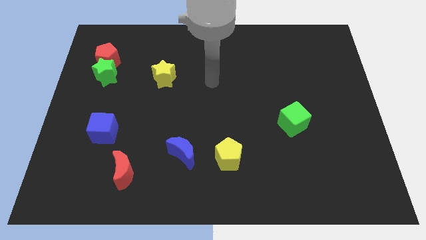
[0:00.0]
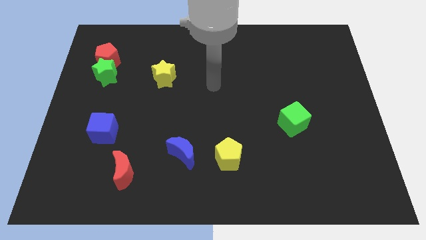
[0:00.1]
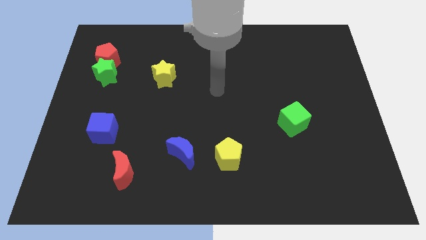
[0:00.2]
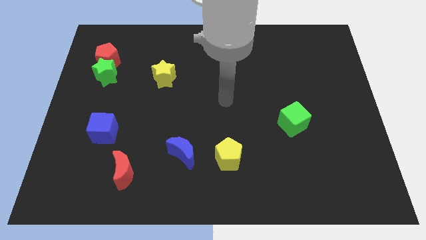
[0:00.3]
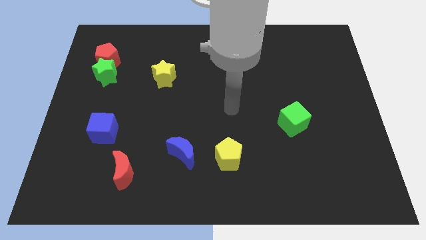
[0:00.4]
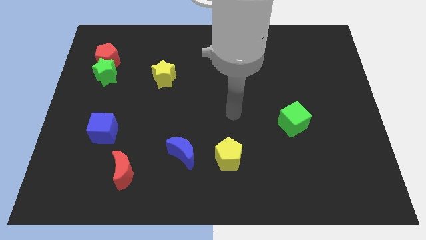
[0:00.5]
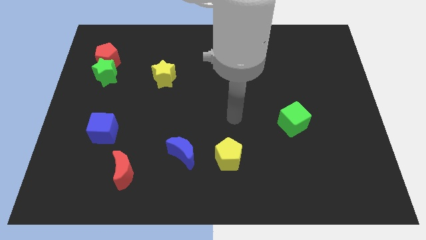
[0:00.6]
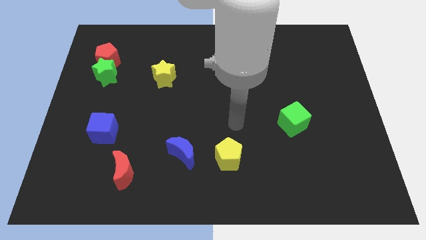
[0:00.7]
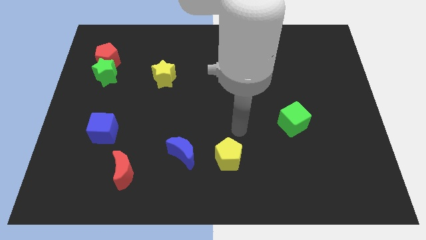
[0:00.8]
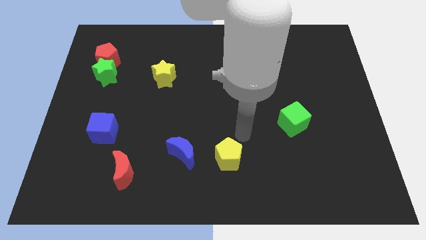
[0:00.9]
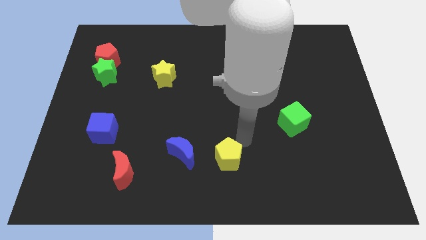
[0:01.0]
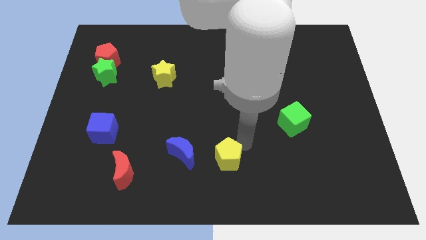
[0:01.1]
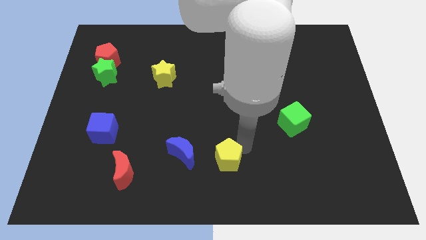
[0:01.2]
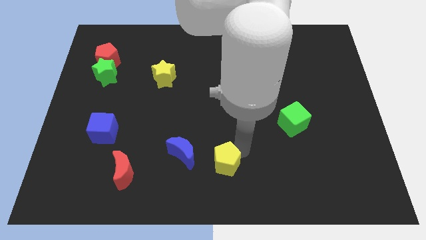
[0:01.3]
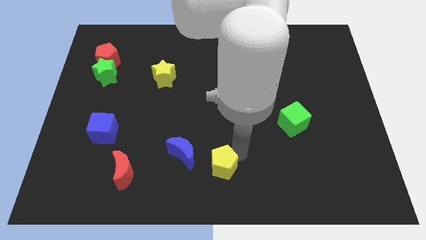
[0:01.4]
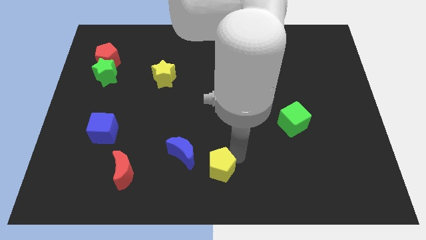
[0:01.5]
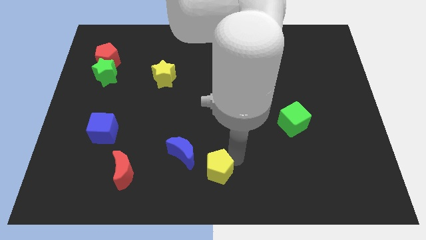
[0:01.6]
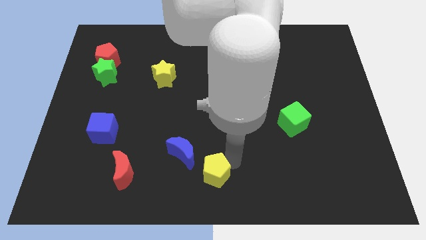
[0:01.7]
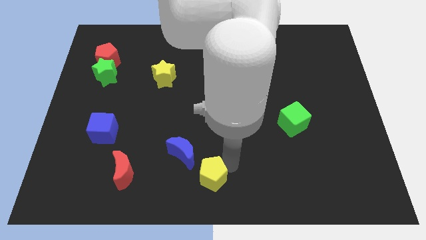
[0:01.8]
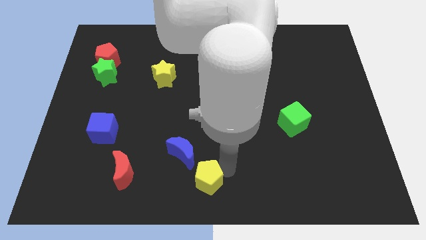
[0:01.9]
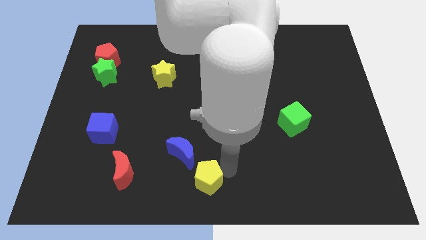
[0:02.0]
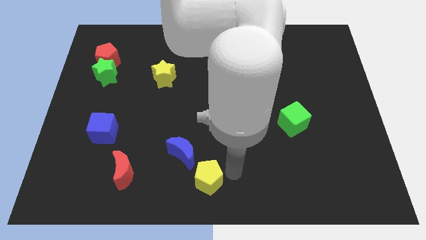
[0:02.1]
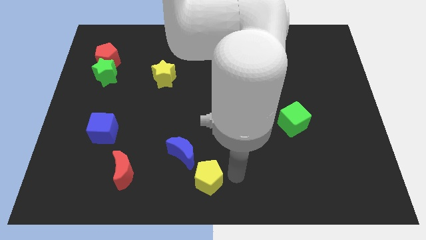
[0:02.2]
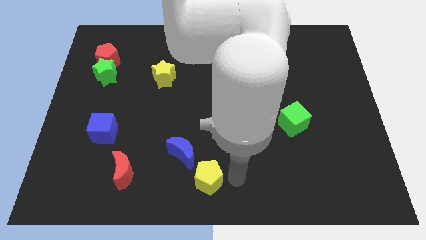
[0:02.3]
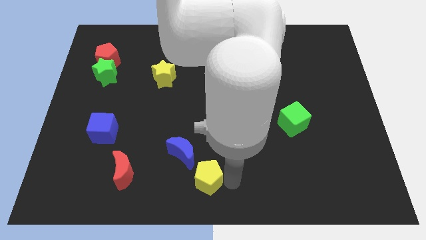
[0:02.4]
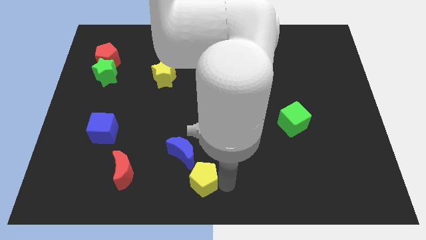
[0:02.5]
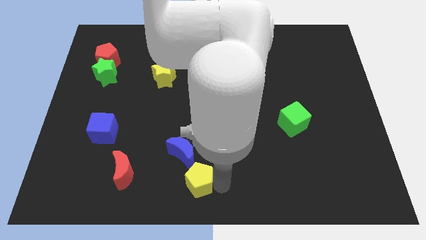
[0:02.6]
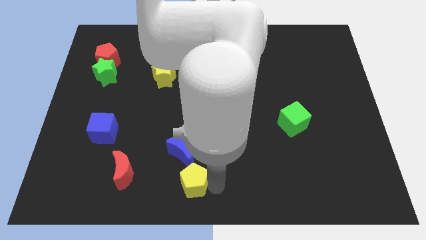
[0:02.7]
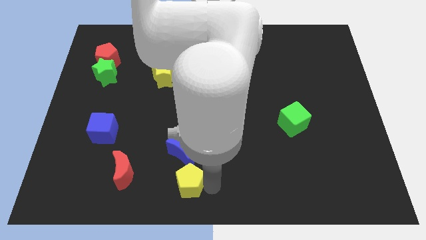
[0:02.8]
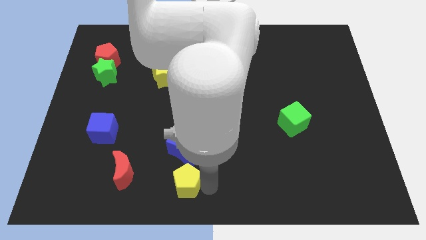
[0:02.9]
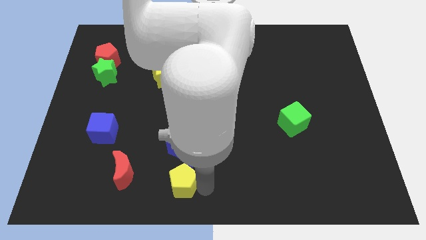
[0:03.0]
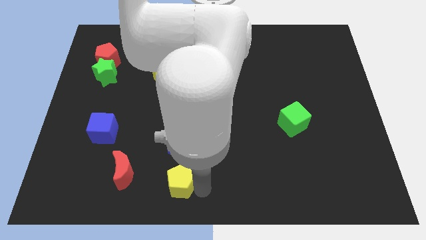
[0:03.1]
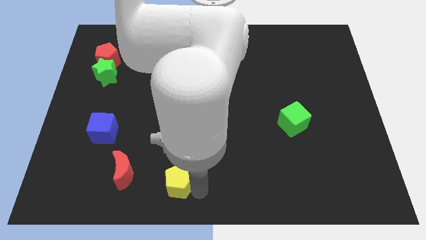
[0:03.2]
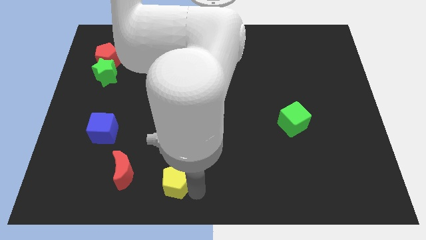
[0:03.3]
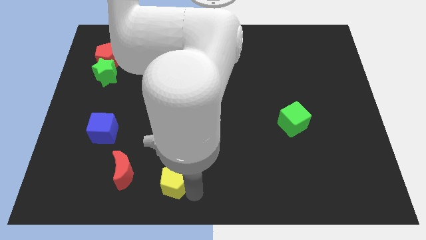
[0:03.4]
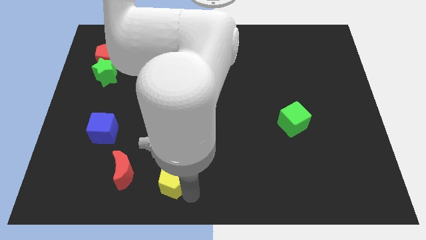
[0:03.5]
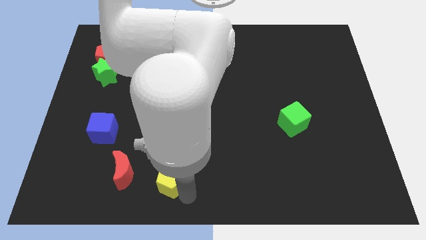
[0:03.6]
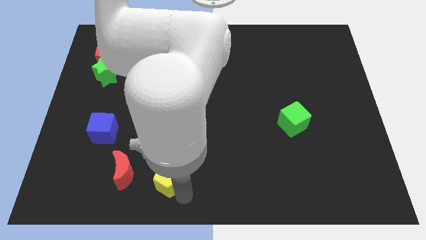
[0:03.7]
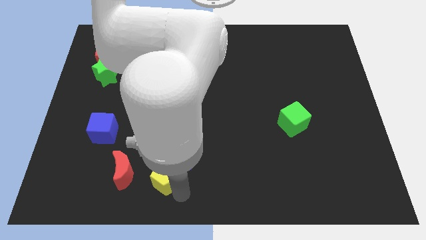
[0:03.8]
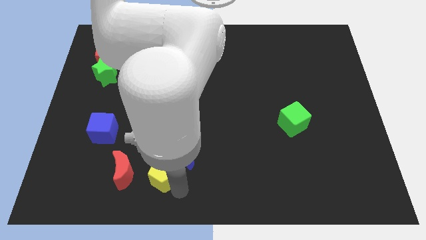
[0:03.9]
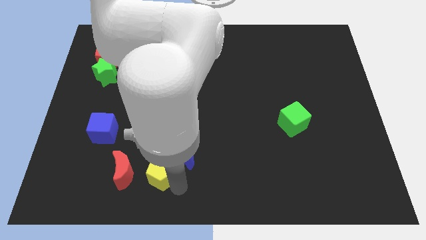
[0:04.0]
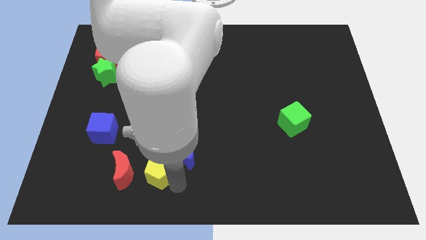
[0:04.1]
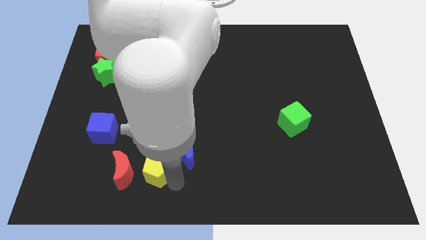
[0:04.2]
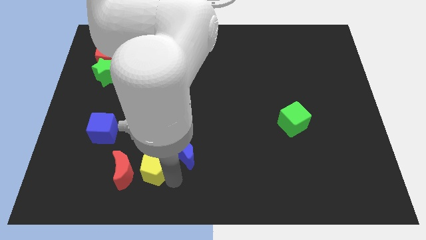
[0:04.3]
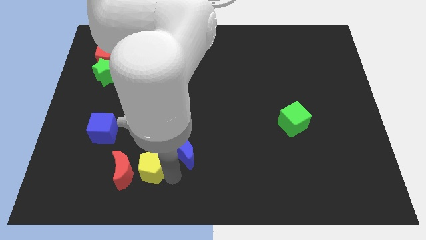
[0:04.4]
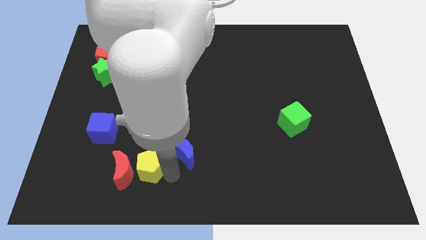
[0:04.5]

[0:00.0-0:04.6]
slide the yellow pentagon close to the red moon

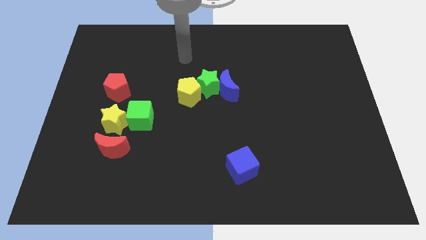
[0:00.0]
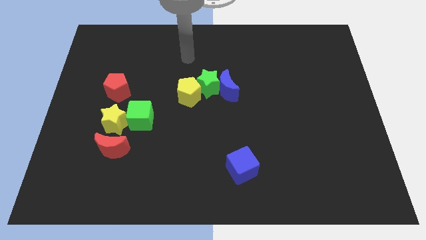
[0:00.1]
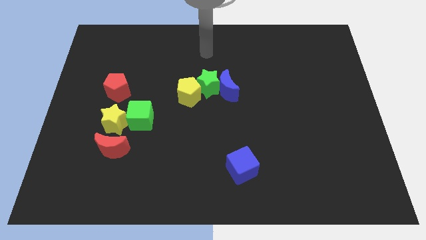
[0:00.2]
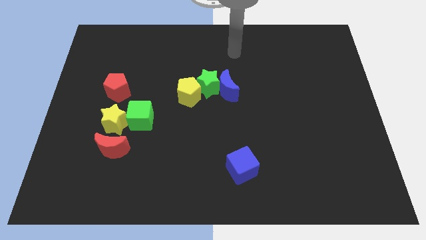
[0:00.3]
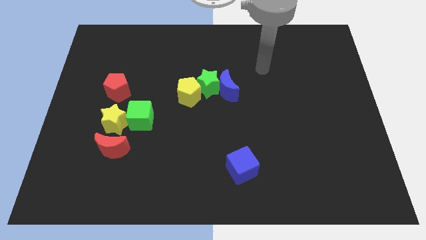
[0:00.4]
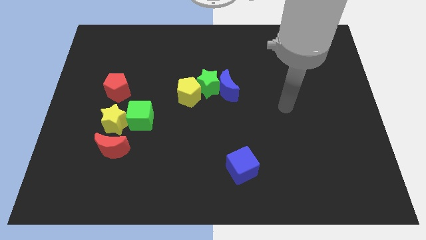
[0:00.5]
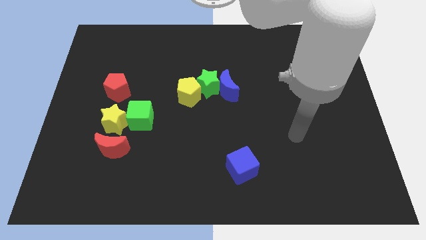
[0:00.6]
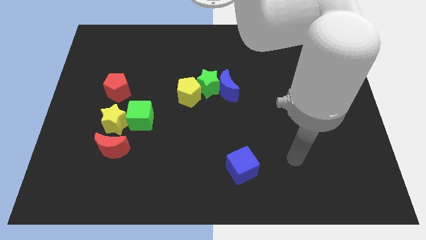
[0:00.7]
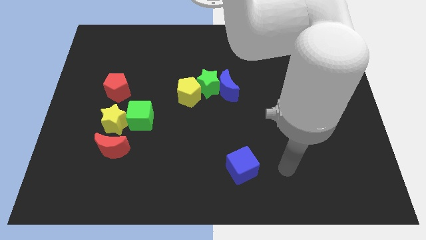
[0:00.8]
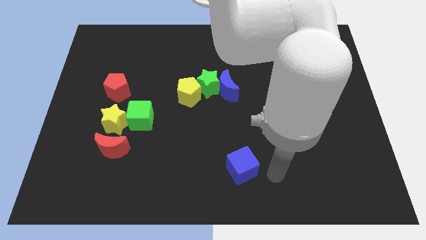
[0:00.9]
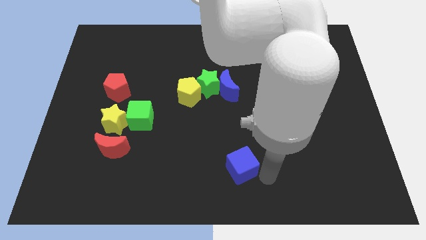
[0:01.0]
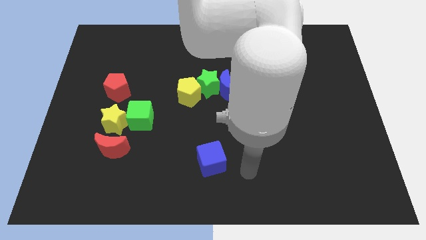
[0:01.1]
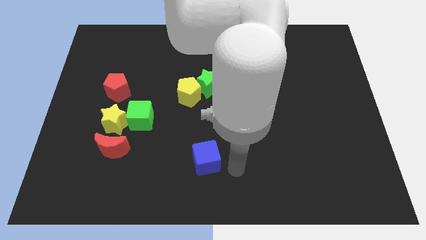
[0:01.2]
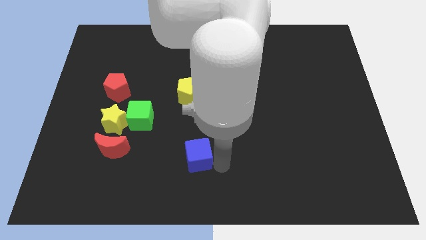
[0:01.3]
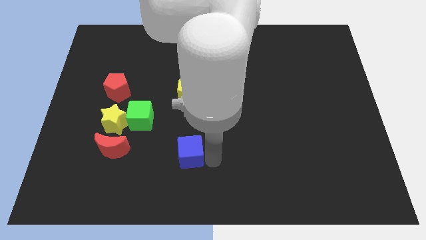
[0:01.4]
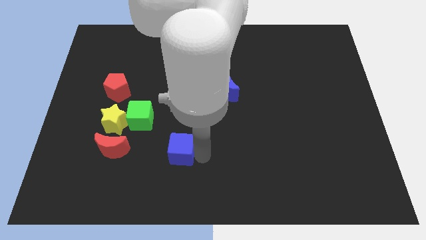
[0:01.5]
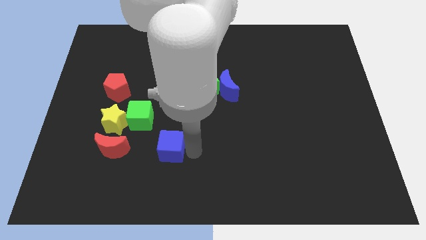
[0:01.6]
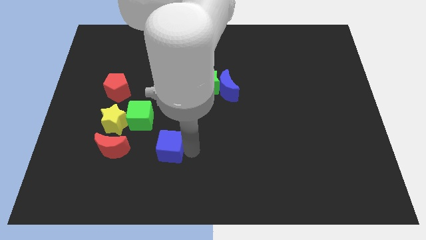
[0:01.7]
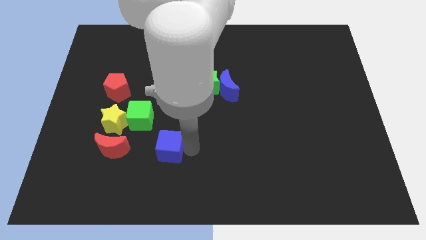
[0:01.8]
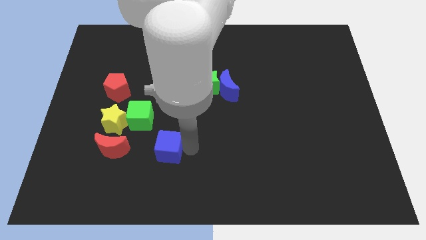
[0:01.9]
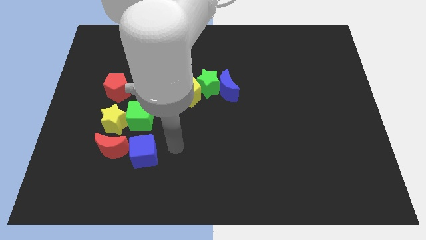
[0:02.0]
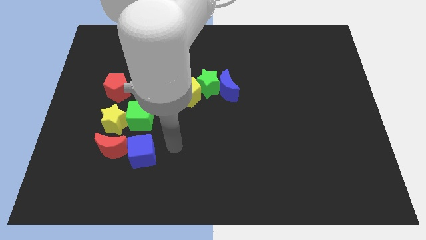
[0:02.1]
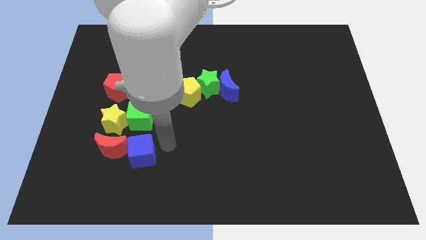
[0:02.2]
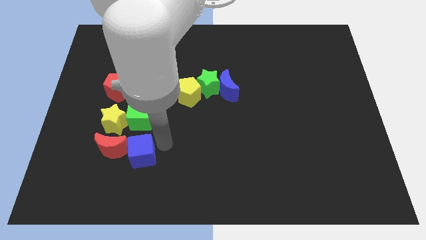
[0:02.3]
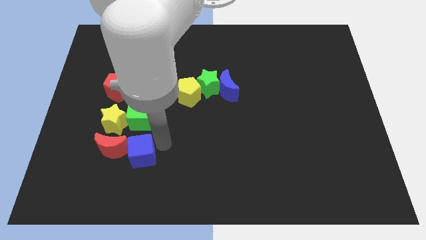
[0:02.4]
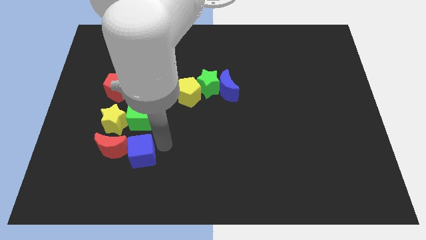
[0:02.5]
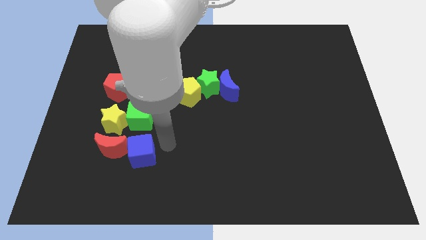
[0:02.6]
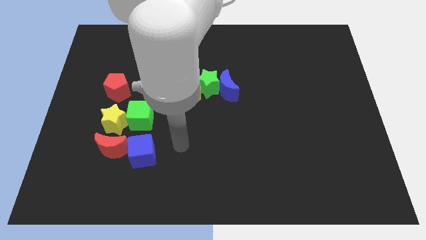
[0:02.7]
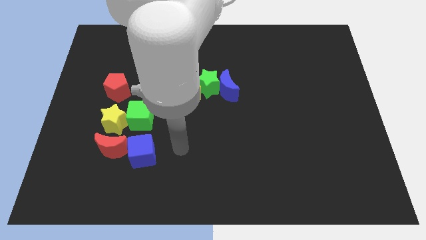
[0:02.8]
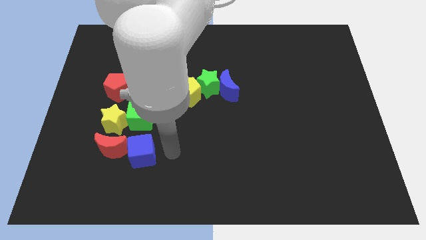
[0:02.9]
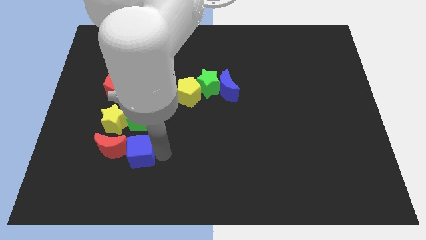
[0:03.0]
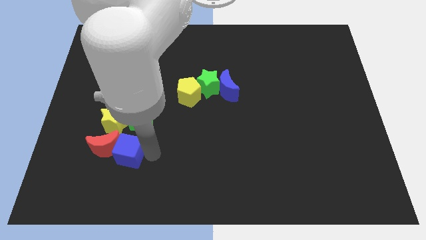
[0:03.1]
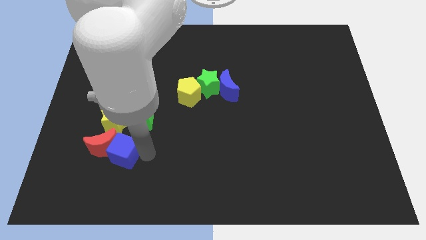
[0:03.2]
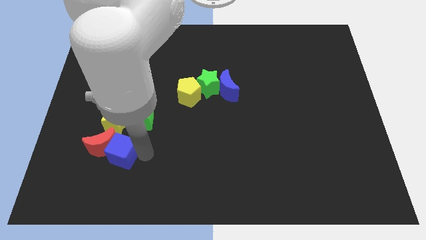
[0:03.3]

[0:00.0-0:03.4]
put the blue cube close to the red moon

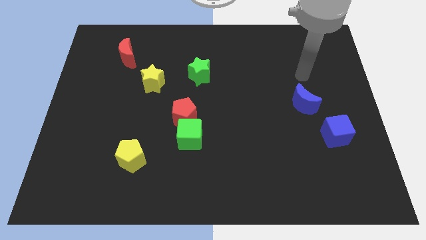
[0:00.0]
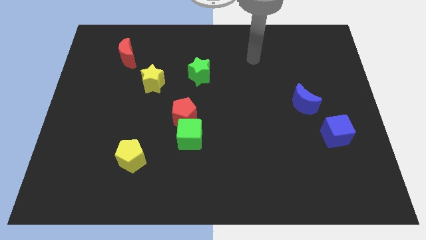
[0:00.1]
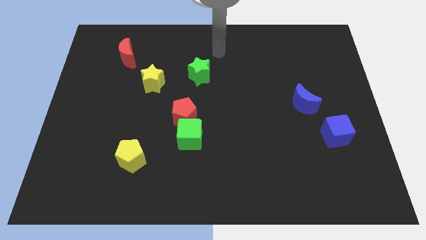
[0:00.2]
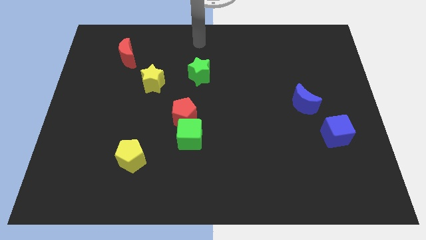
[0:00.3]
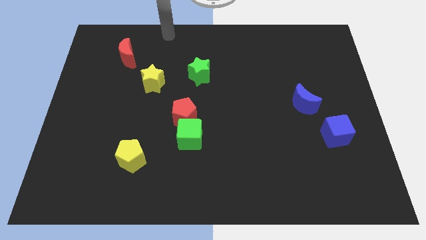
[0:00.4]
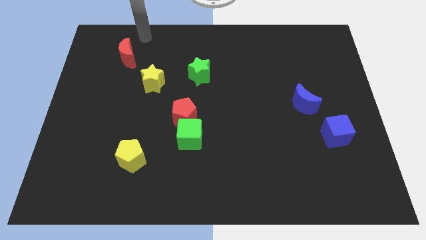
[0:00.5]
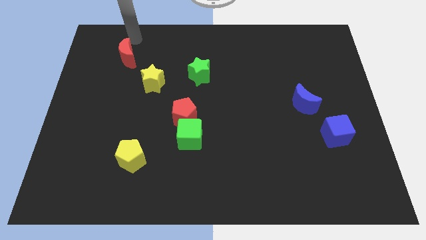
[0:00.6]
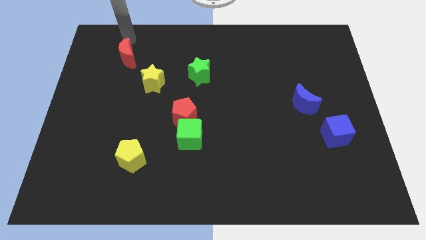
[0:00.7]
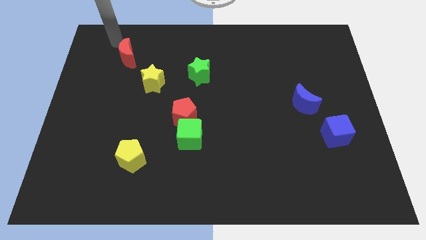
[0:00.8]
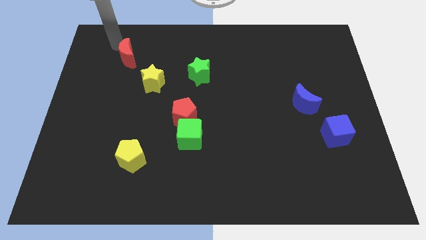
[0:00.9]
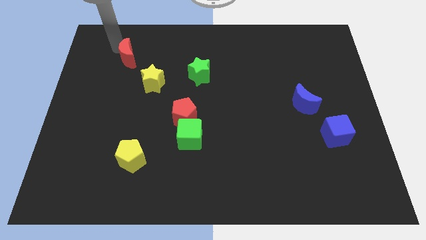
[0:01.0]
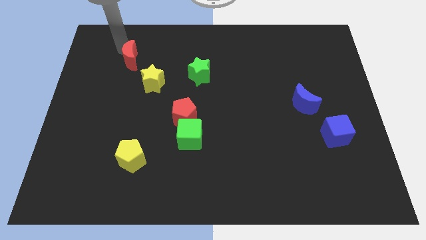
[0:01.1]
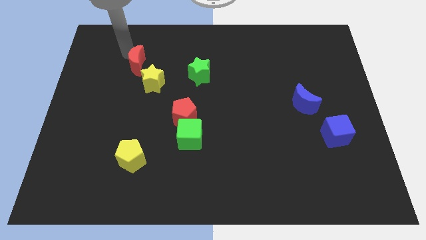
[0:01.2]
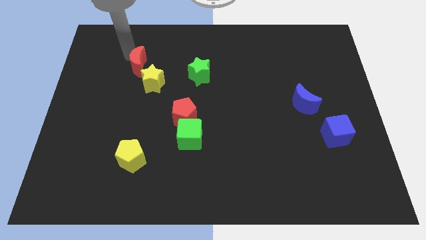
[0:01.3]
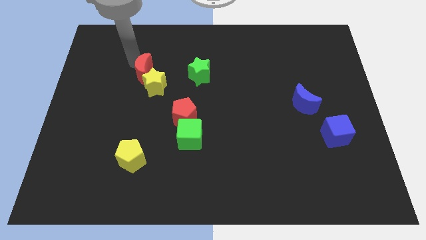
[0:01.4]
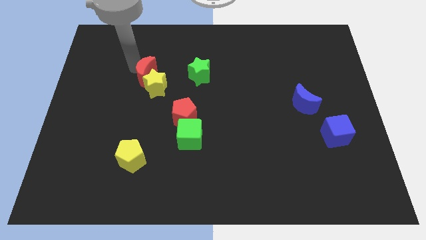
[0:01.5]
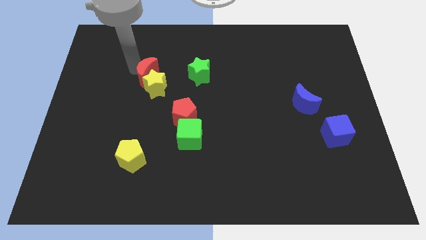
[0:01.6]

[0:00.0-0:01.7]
move the red moon towards the yellow star
